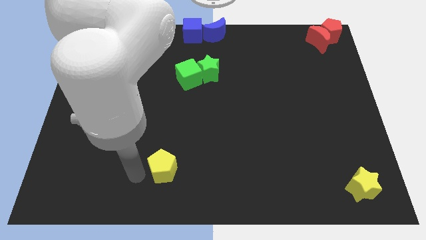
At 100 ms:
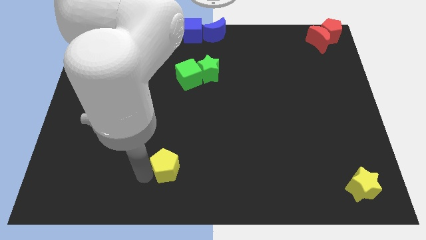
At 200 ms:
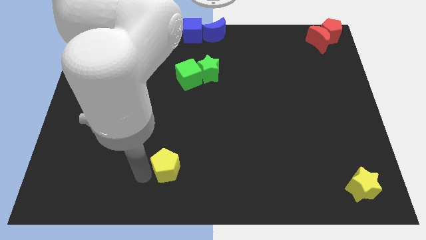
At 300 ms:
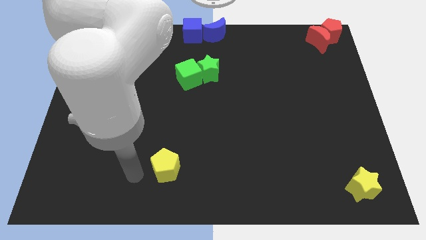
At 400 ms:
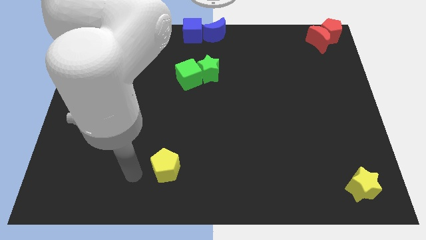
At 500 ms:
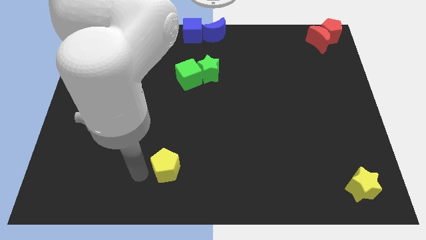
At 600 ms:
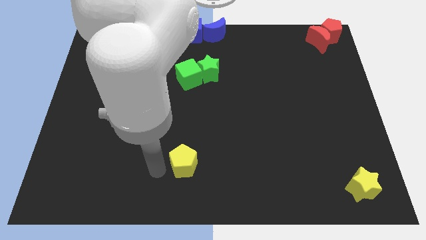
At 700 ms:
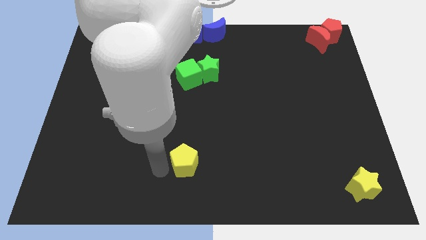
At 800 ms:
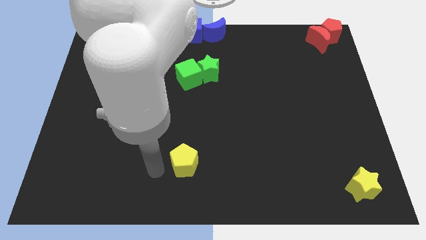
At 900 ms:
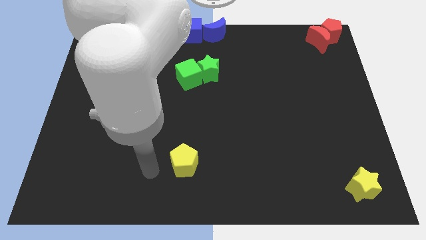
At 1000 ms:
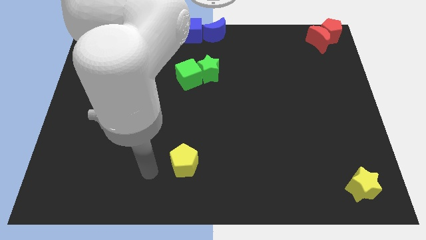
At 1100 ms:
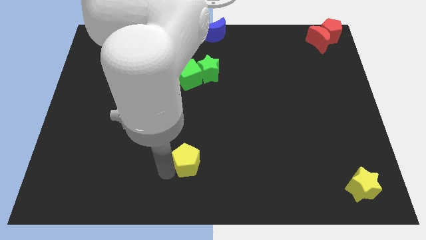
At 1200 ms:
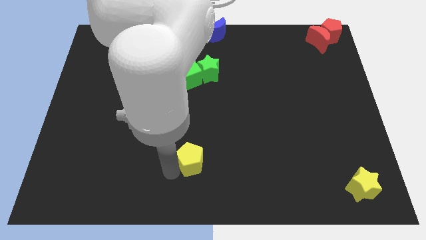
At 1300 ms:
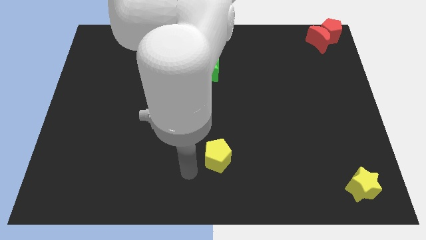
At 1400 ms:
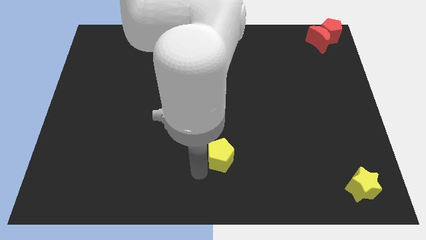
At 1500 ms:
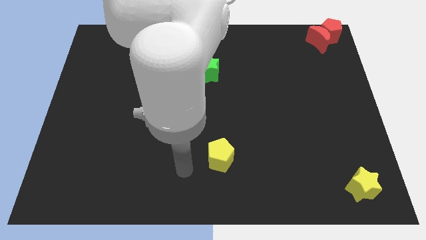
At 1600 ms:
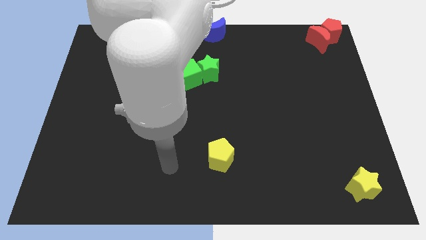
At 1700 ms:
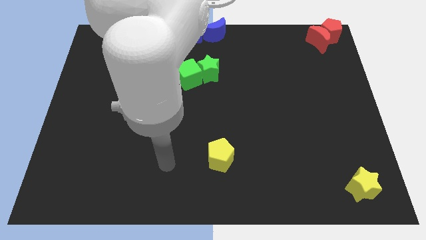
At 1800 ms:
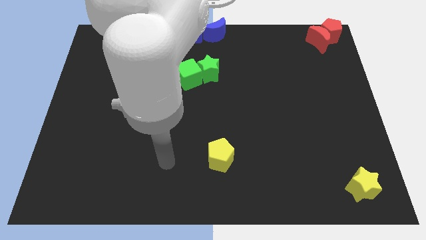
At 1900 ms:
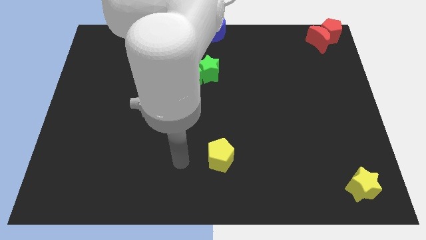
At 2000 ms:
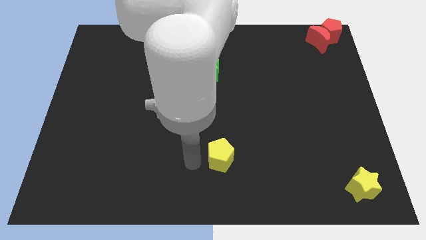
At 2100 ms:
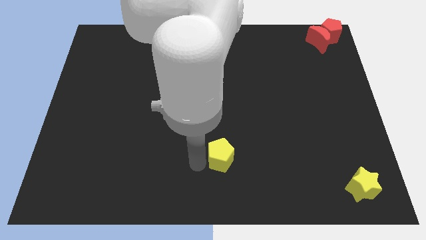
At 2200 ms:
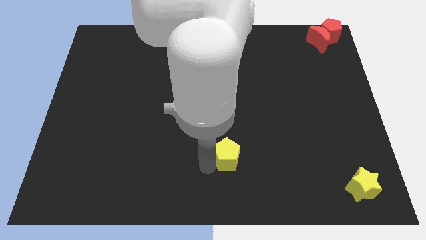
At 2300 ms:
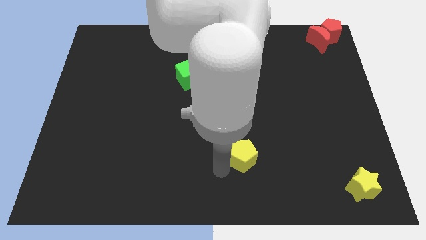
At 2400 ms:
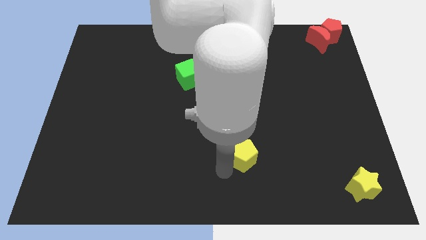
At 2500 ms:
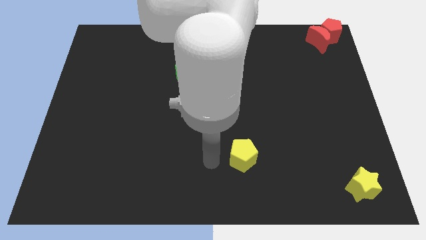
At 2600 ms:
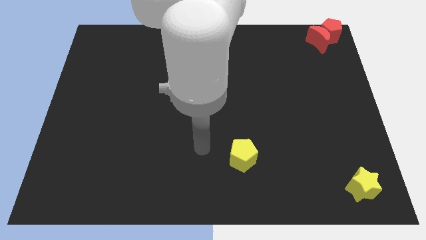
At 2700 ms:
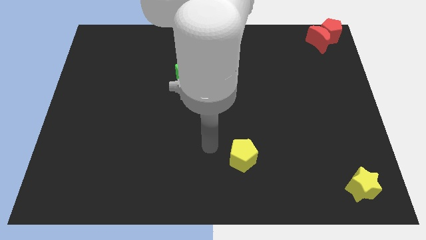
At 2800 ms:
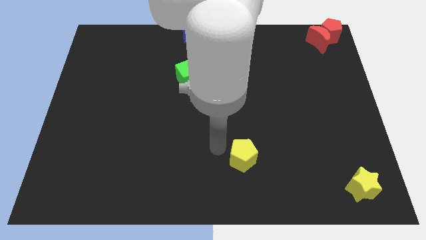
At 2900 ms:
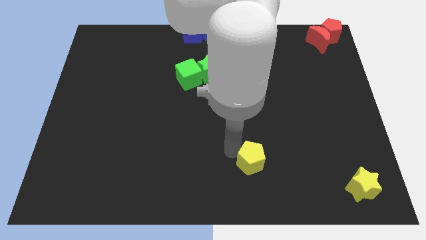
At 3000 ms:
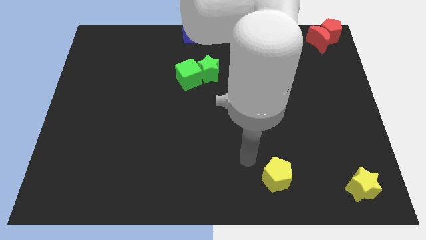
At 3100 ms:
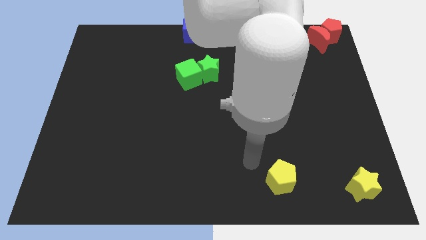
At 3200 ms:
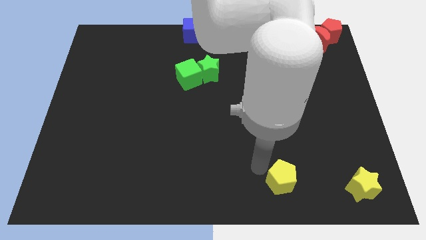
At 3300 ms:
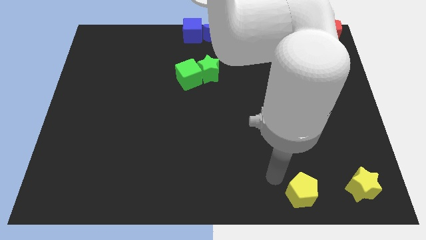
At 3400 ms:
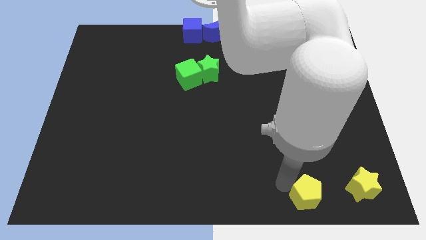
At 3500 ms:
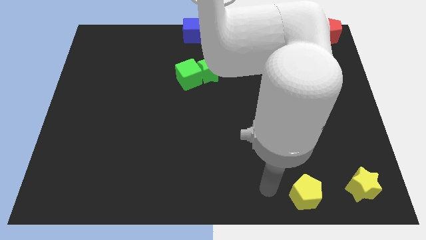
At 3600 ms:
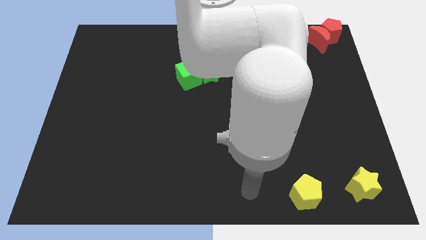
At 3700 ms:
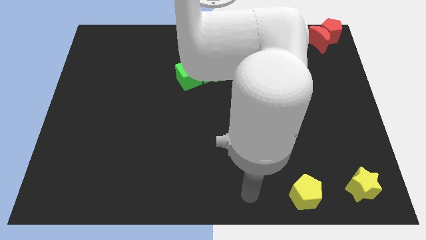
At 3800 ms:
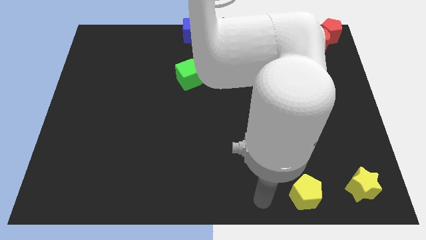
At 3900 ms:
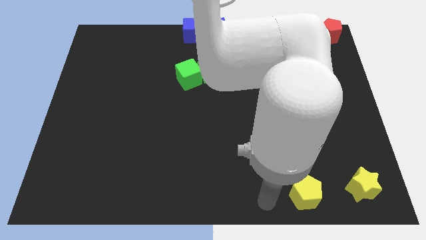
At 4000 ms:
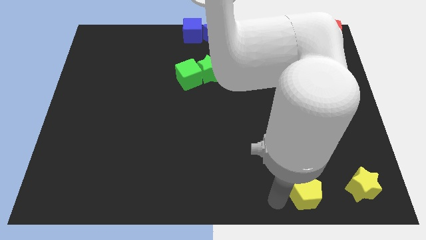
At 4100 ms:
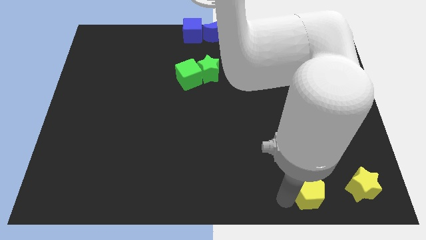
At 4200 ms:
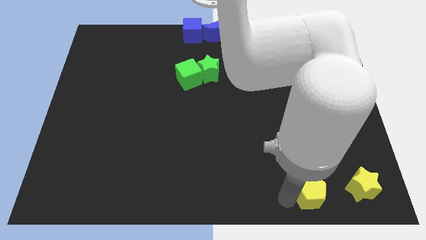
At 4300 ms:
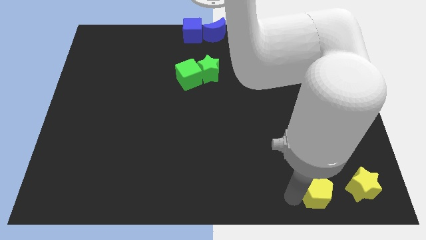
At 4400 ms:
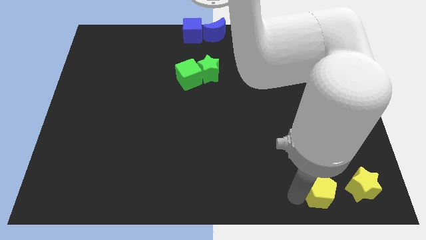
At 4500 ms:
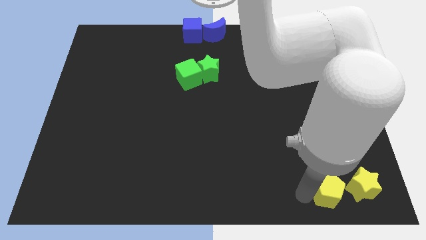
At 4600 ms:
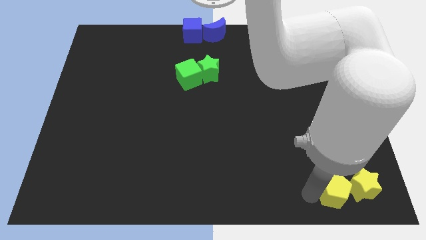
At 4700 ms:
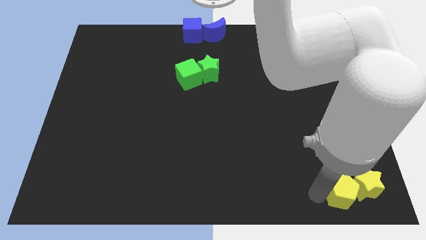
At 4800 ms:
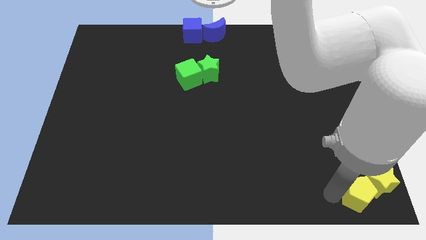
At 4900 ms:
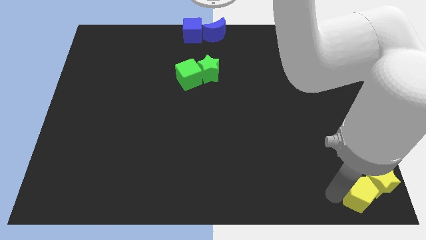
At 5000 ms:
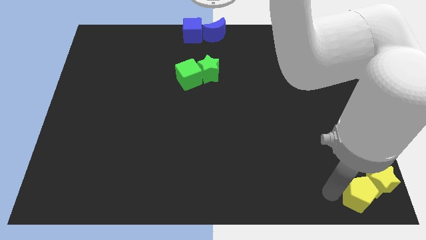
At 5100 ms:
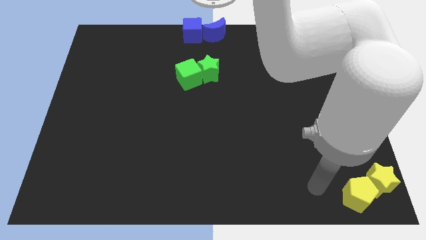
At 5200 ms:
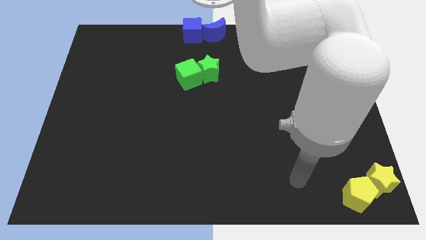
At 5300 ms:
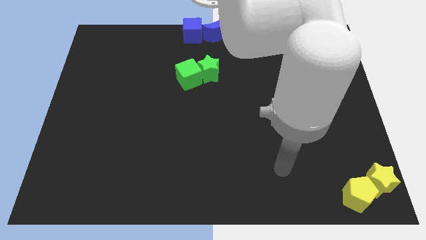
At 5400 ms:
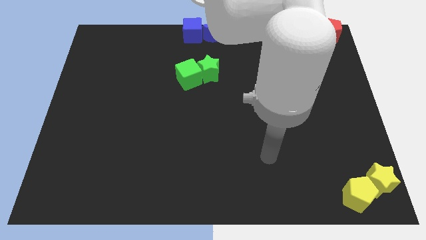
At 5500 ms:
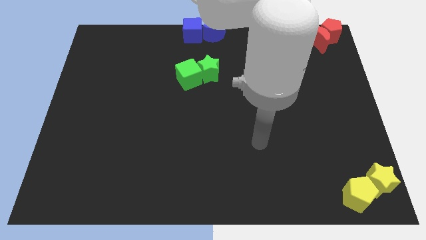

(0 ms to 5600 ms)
place the yellow pentagon next to the yellow star

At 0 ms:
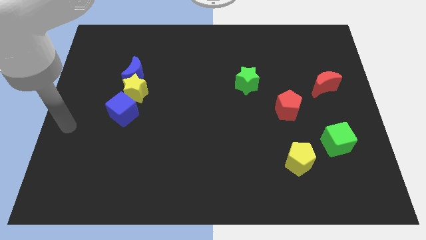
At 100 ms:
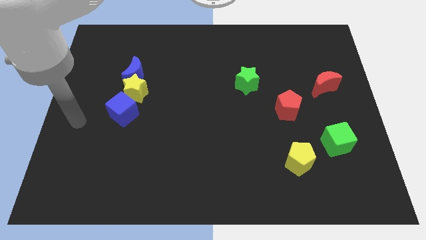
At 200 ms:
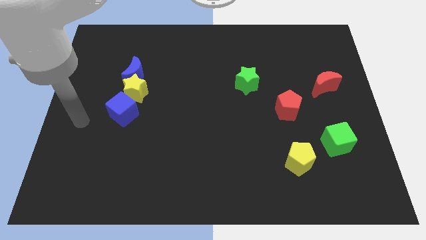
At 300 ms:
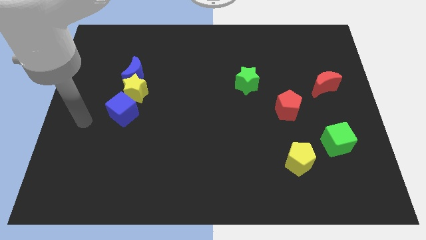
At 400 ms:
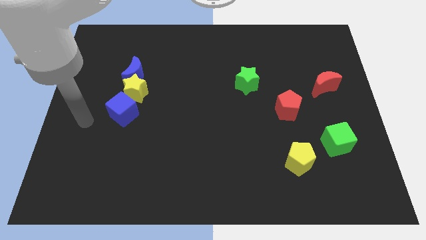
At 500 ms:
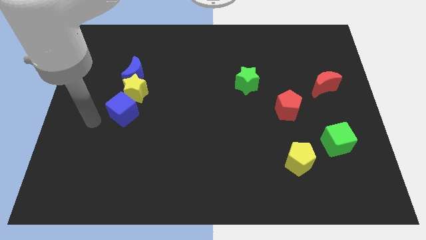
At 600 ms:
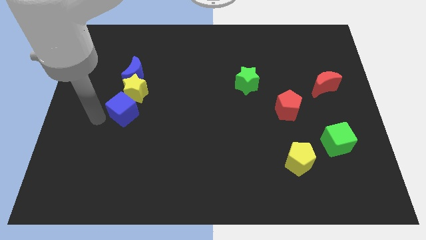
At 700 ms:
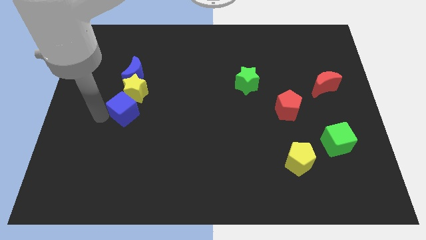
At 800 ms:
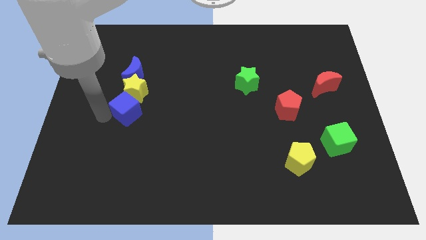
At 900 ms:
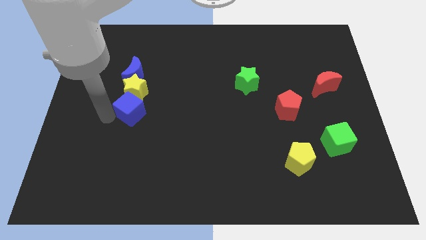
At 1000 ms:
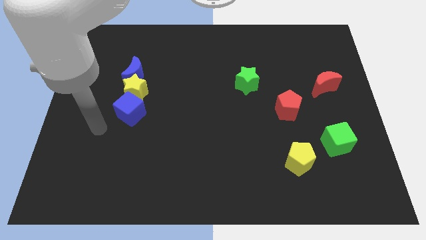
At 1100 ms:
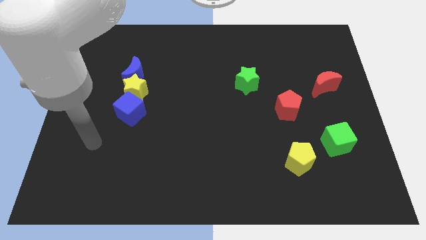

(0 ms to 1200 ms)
slightly move the blue cube to the right side

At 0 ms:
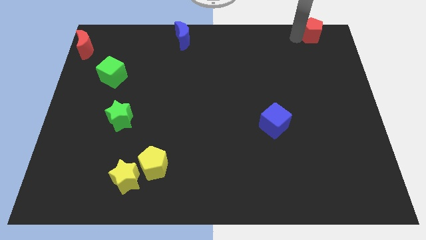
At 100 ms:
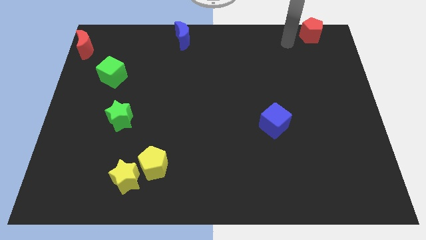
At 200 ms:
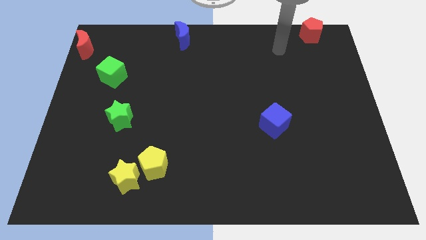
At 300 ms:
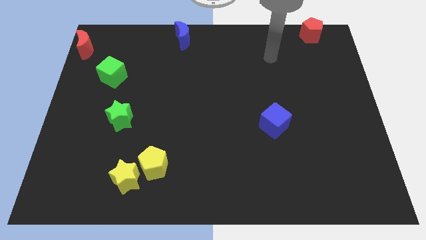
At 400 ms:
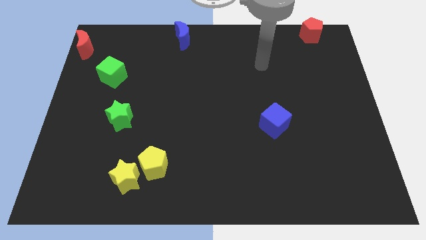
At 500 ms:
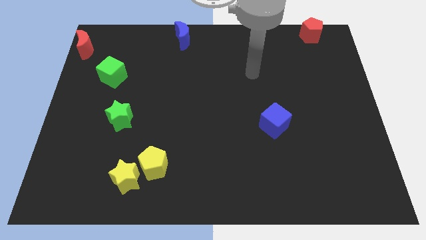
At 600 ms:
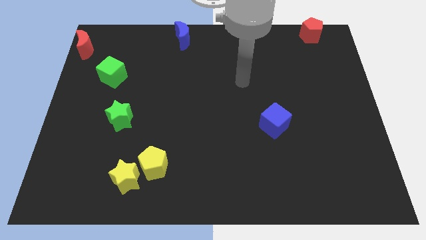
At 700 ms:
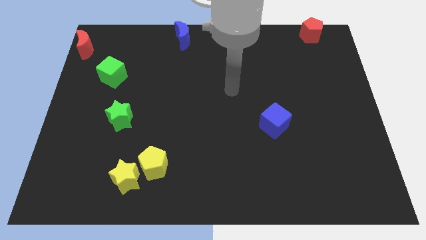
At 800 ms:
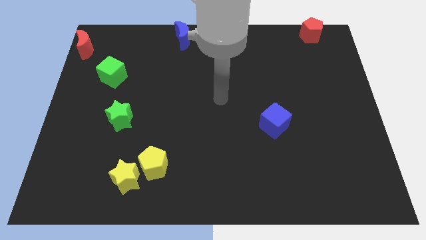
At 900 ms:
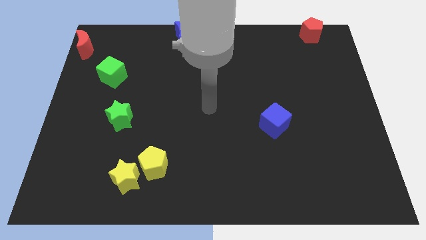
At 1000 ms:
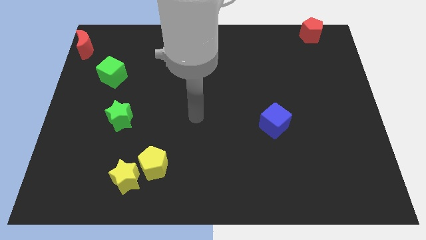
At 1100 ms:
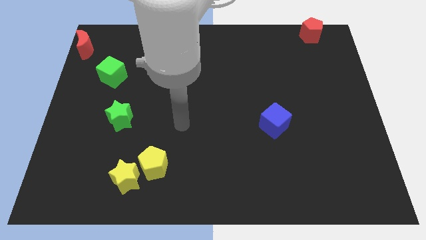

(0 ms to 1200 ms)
move the arm away from the red pentagon

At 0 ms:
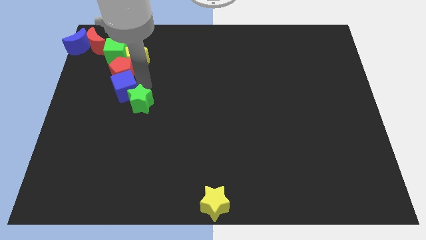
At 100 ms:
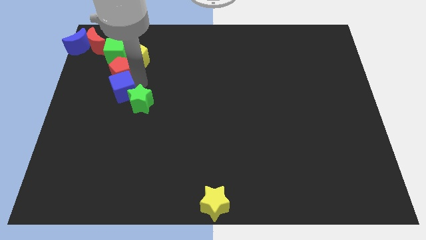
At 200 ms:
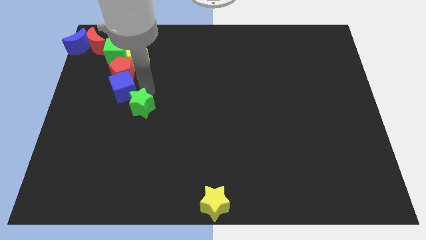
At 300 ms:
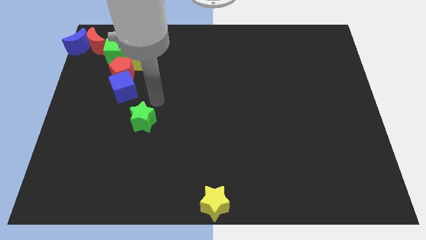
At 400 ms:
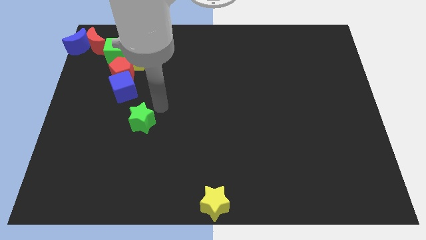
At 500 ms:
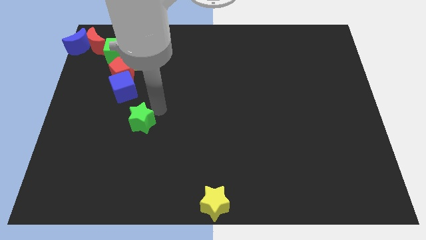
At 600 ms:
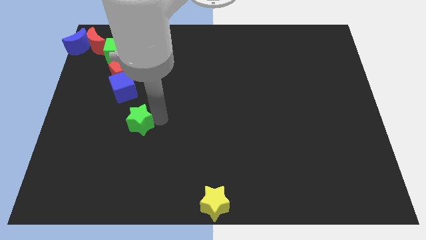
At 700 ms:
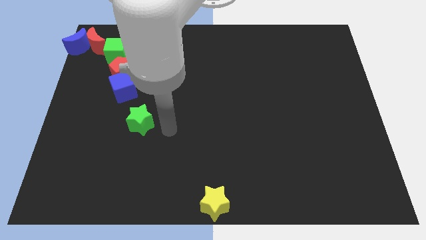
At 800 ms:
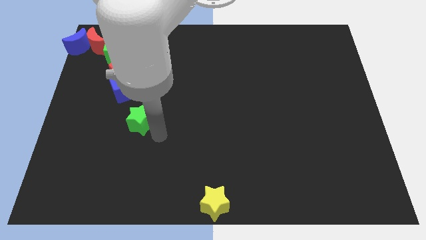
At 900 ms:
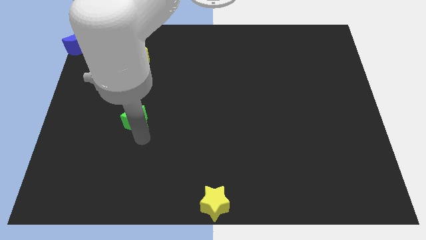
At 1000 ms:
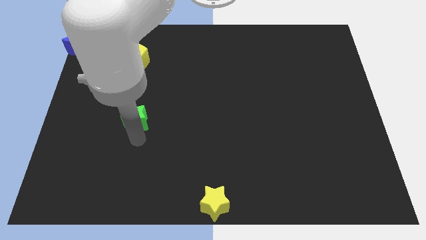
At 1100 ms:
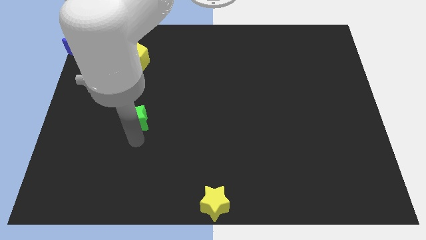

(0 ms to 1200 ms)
separate green star from the blue cube
